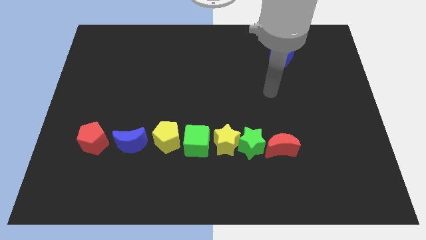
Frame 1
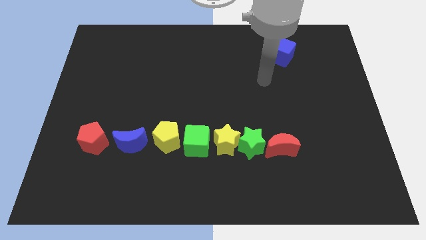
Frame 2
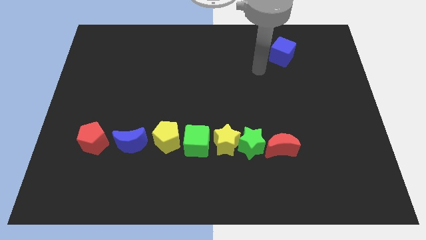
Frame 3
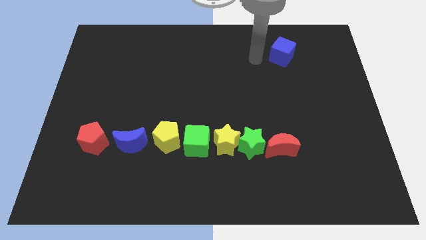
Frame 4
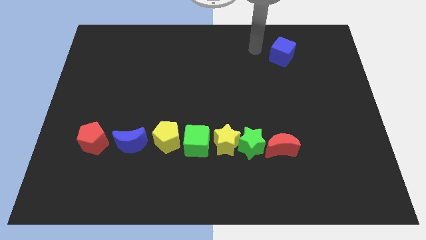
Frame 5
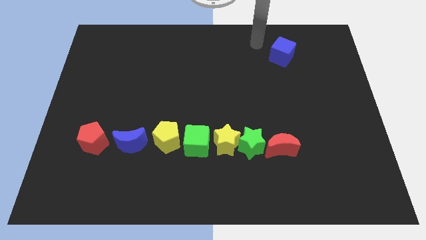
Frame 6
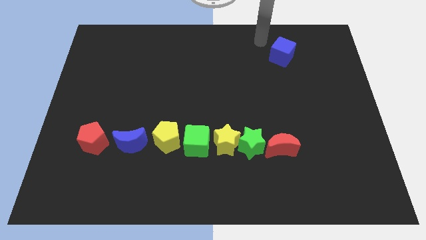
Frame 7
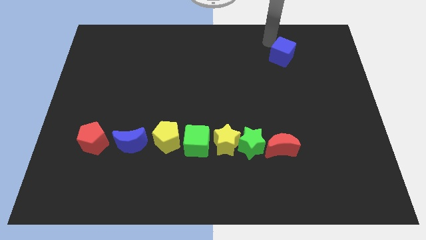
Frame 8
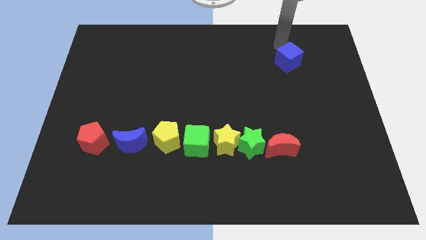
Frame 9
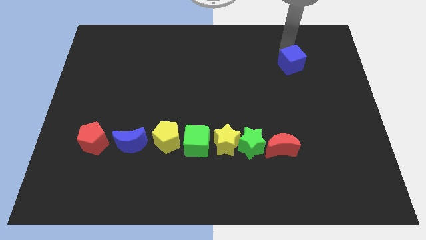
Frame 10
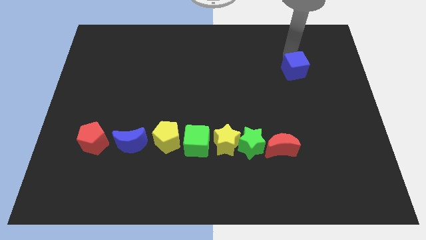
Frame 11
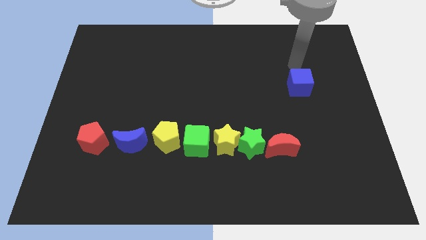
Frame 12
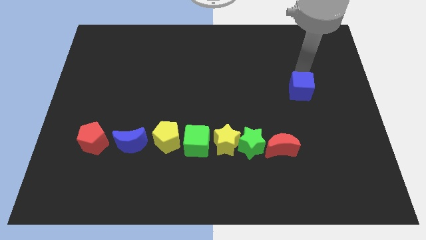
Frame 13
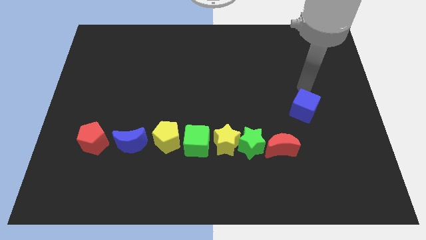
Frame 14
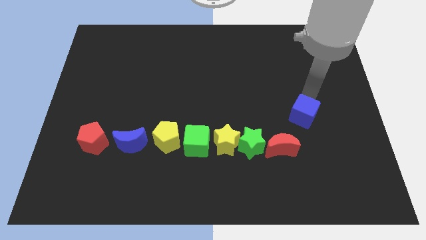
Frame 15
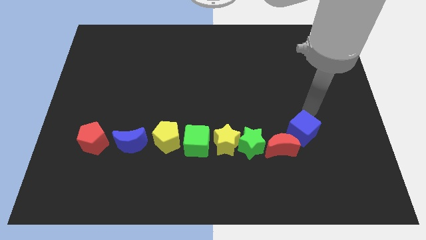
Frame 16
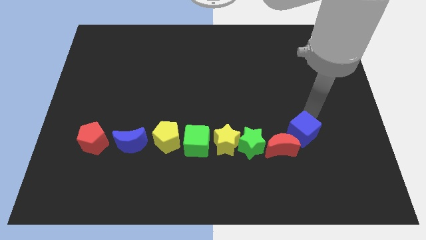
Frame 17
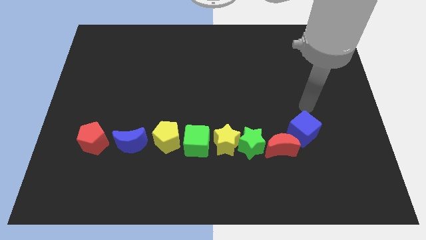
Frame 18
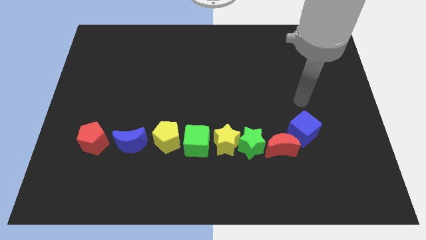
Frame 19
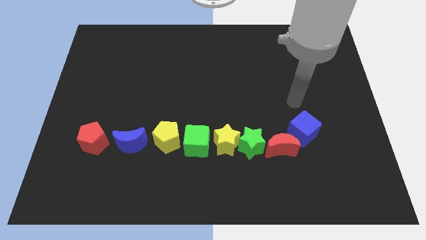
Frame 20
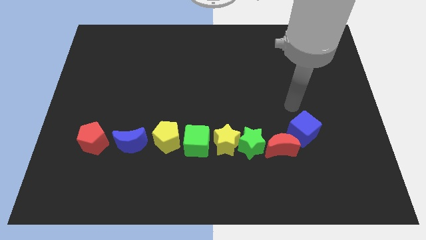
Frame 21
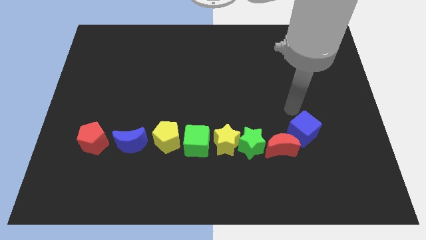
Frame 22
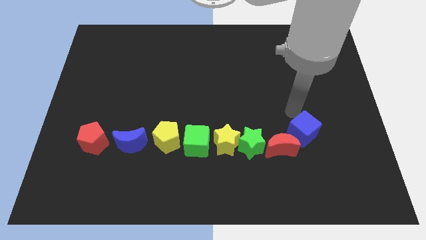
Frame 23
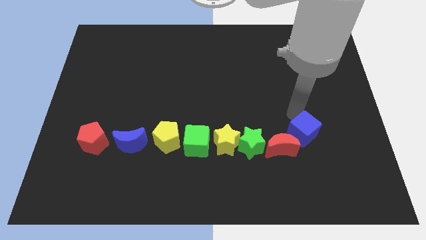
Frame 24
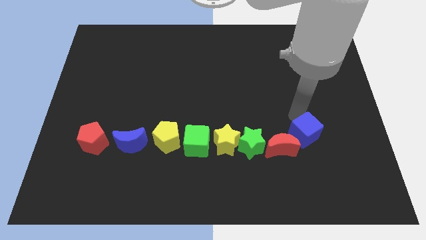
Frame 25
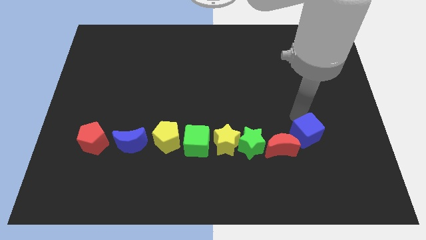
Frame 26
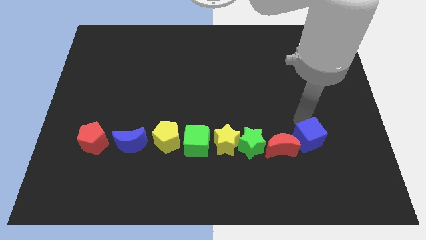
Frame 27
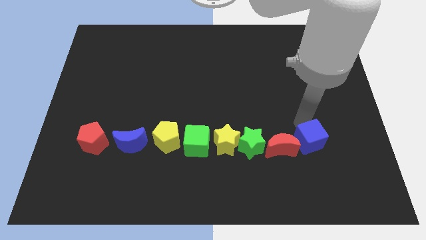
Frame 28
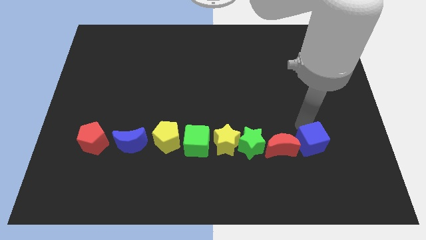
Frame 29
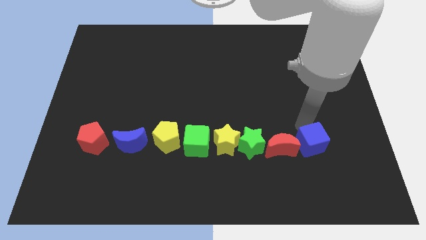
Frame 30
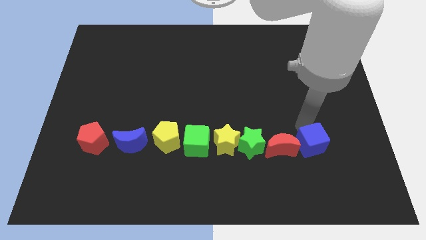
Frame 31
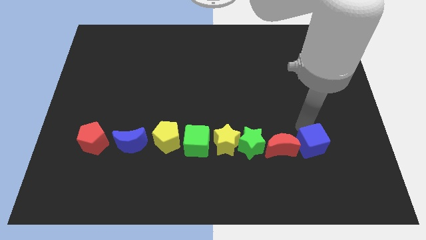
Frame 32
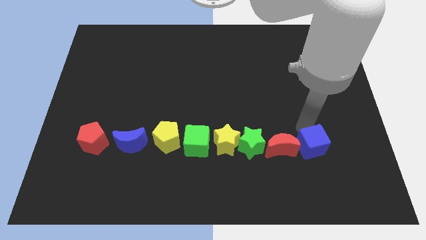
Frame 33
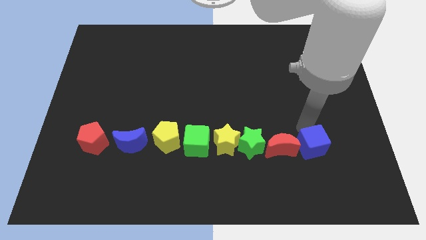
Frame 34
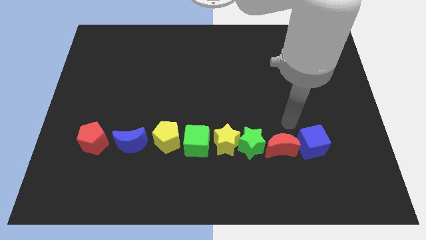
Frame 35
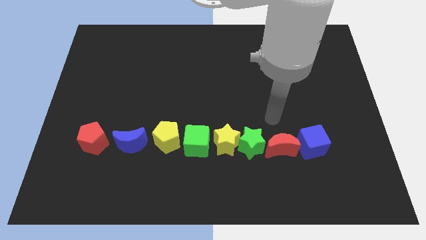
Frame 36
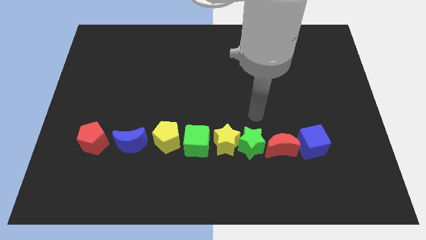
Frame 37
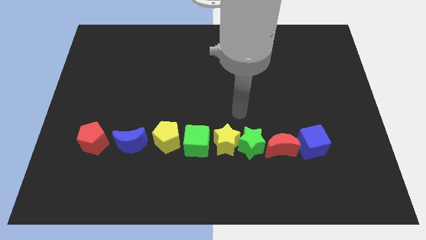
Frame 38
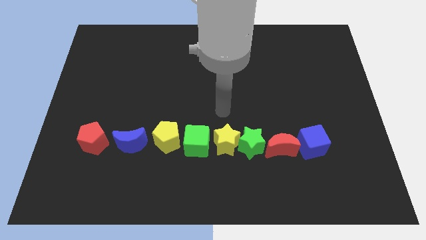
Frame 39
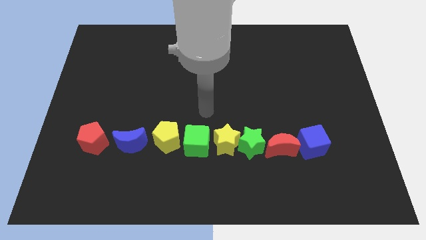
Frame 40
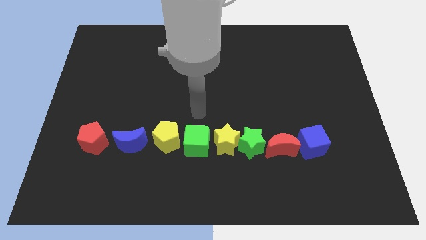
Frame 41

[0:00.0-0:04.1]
place the blue cube to the right of red moon

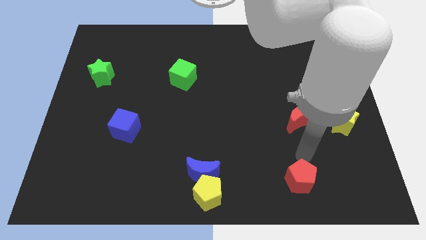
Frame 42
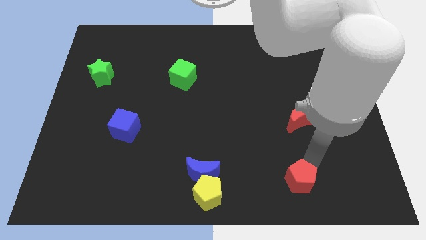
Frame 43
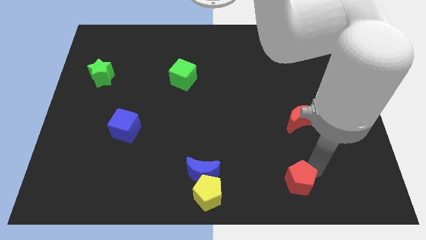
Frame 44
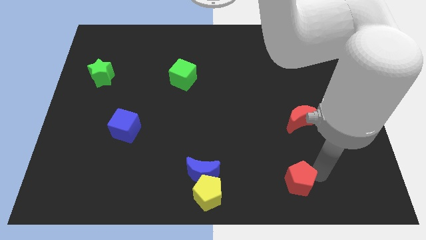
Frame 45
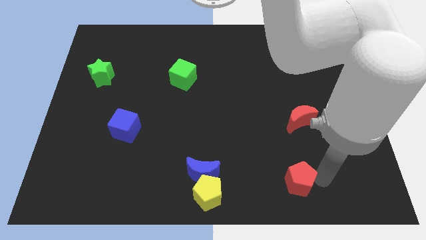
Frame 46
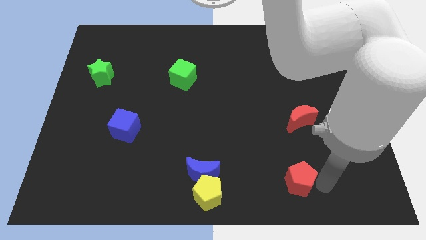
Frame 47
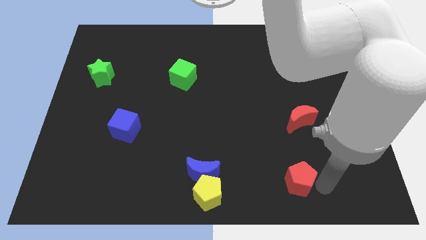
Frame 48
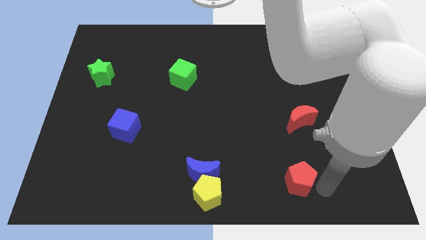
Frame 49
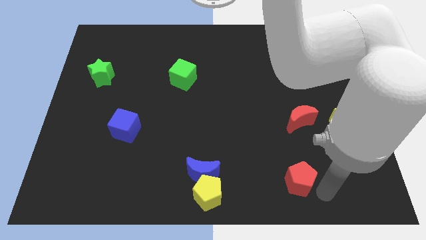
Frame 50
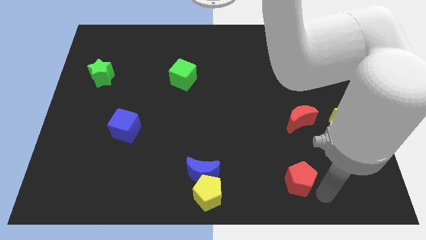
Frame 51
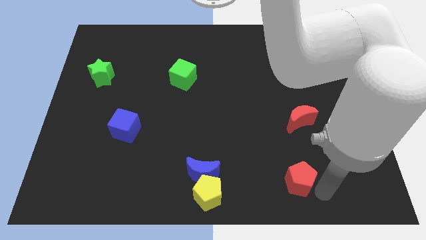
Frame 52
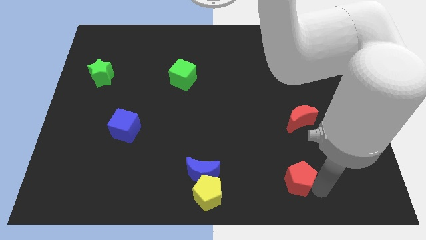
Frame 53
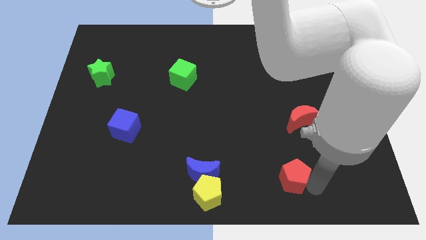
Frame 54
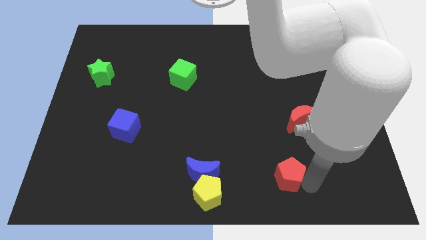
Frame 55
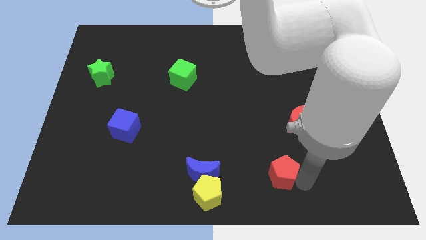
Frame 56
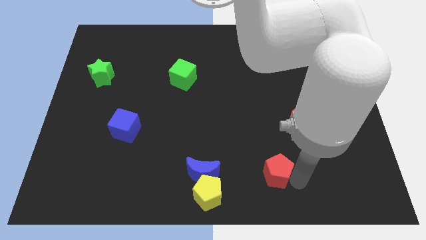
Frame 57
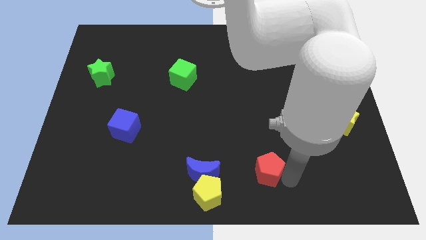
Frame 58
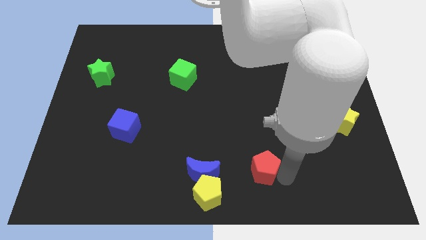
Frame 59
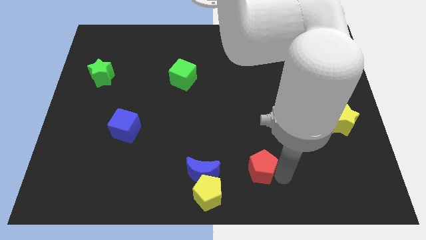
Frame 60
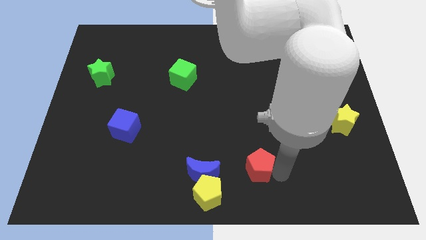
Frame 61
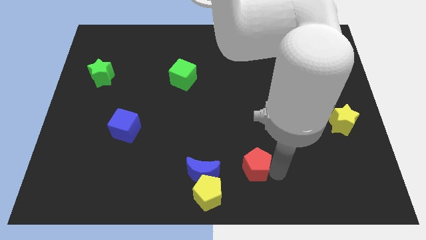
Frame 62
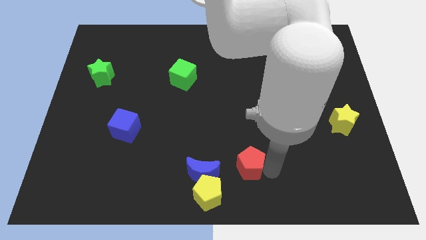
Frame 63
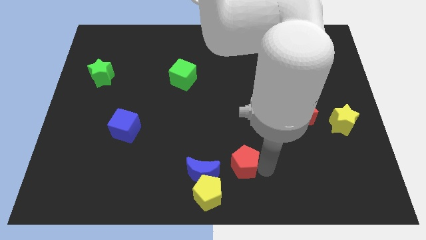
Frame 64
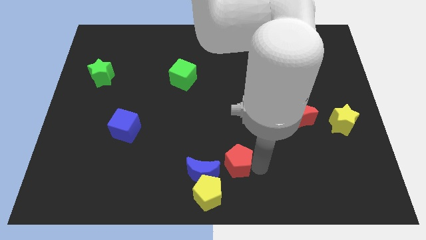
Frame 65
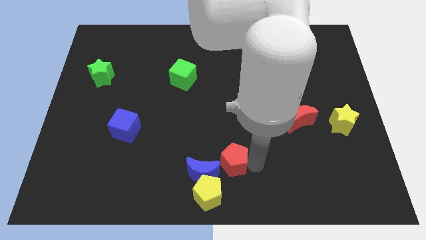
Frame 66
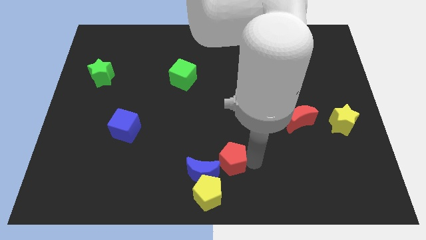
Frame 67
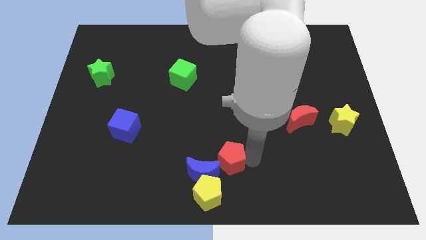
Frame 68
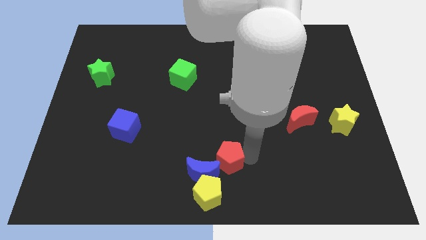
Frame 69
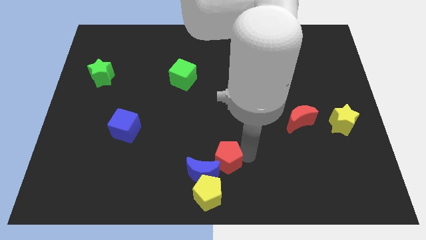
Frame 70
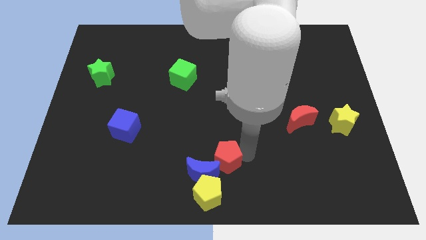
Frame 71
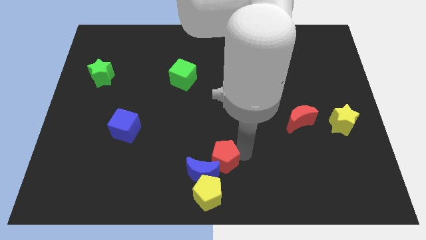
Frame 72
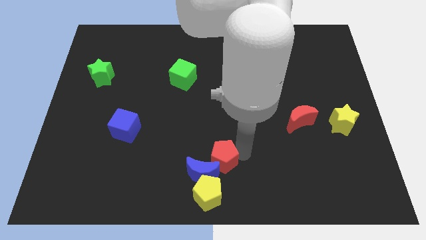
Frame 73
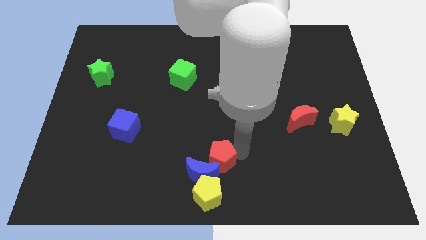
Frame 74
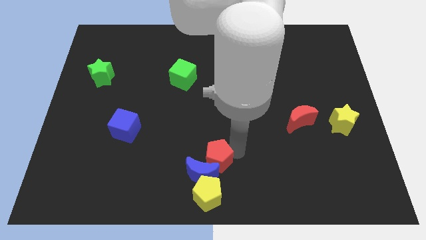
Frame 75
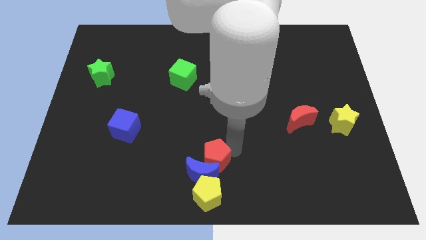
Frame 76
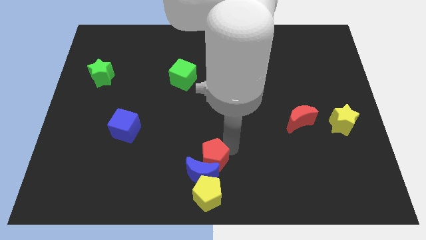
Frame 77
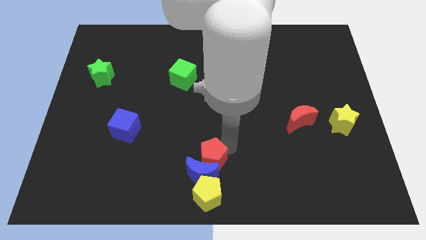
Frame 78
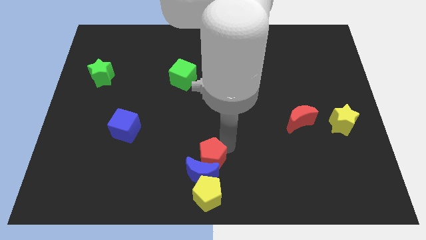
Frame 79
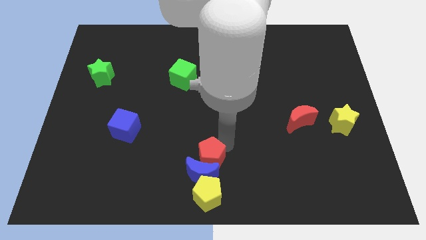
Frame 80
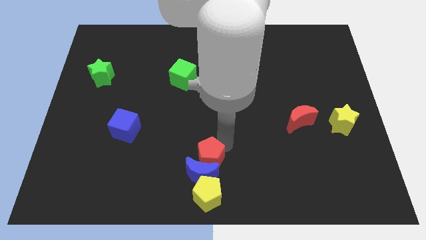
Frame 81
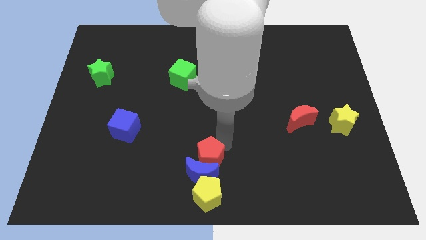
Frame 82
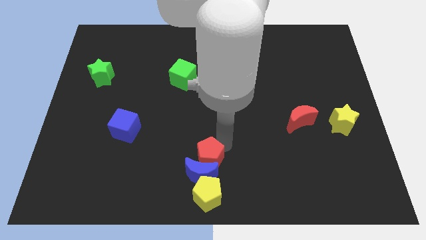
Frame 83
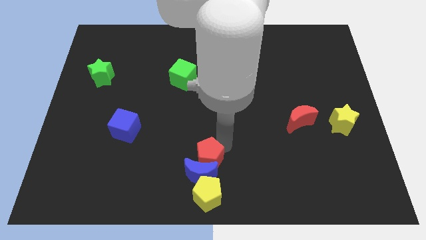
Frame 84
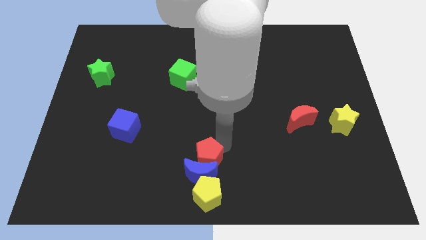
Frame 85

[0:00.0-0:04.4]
place the red crescent downwards to blue crescent

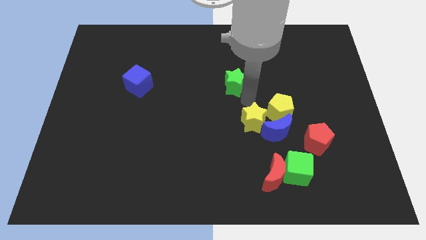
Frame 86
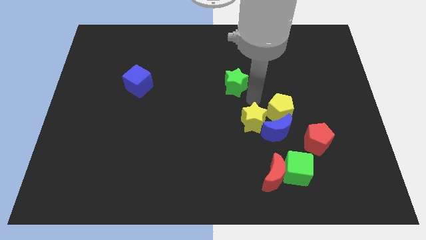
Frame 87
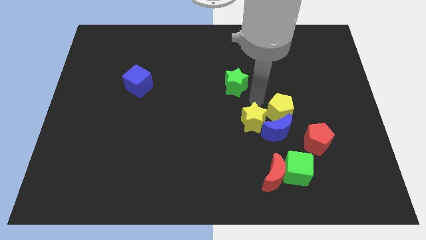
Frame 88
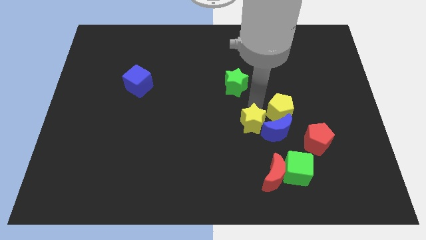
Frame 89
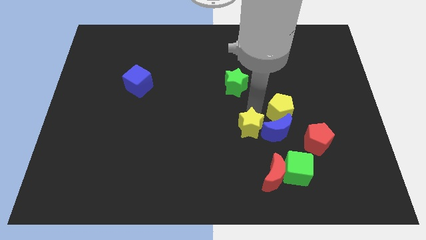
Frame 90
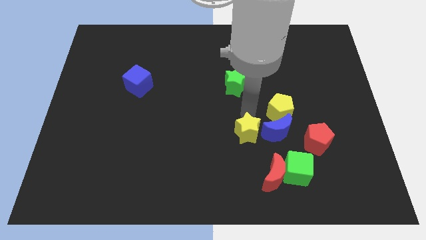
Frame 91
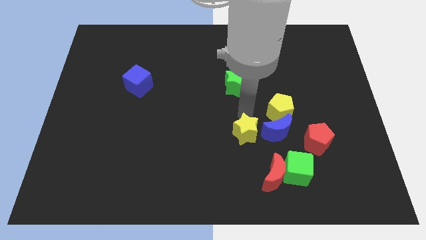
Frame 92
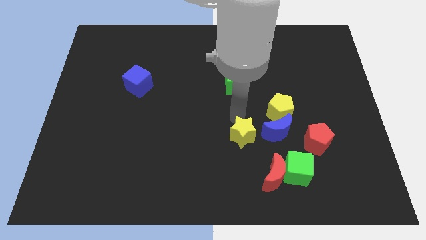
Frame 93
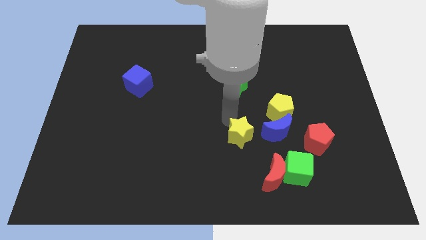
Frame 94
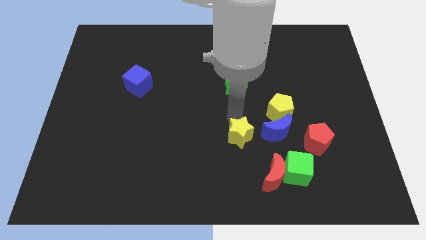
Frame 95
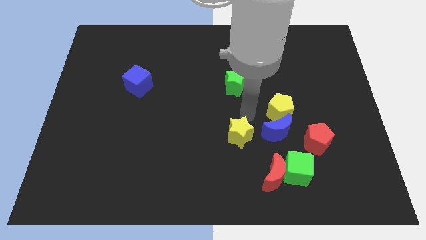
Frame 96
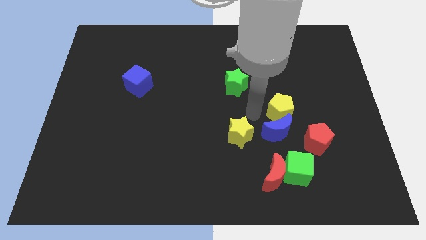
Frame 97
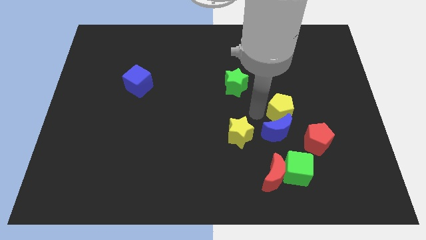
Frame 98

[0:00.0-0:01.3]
move the yellow star towards the center of board
